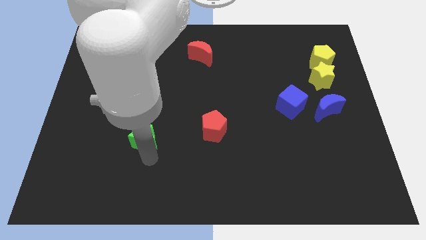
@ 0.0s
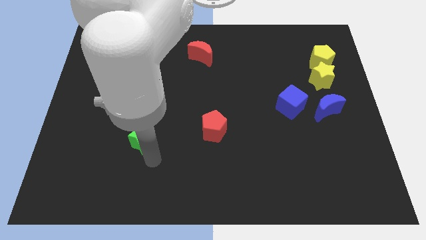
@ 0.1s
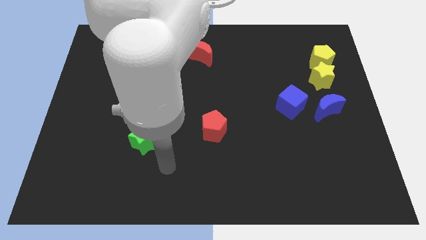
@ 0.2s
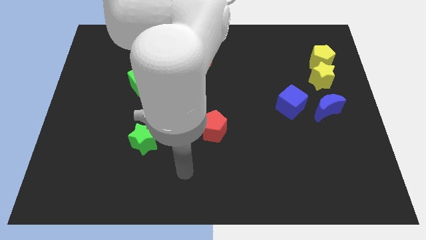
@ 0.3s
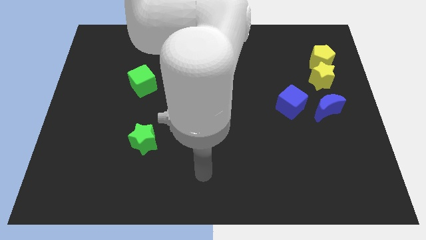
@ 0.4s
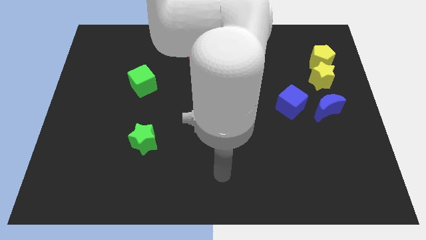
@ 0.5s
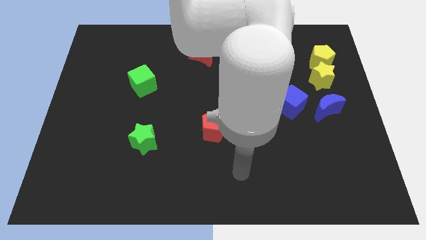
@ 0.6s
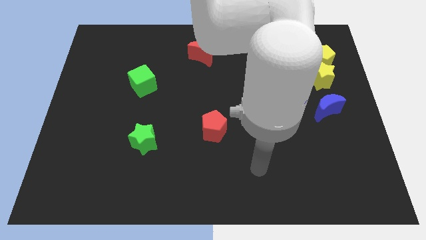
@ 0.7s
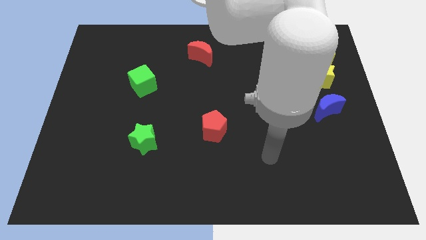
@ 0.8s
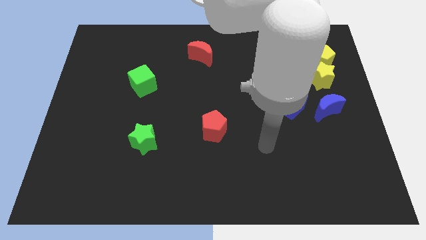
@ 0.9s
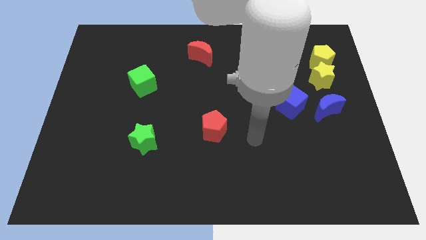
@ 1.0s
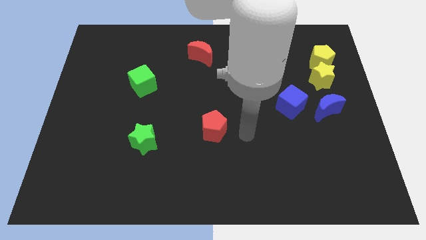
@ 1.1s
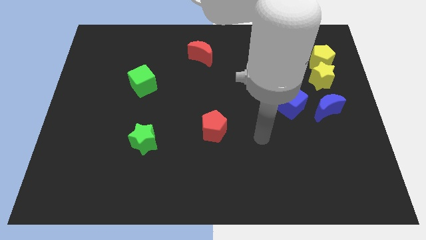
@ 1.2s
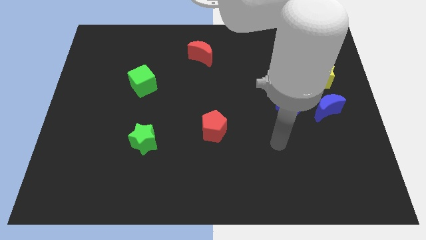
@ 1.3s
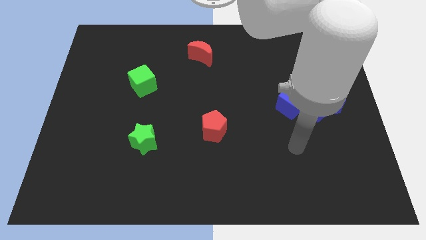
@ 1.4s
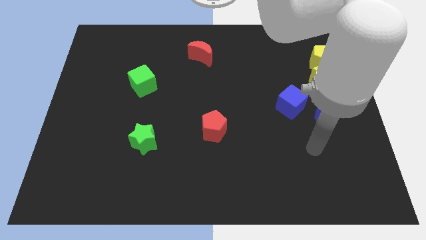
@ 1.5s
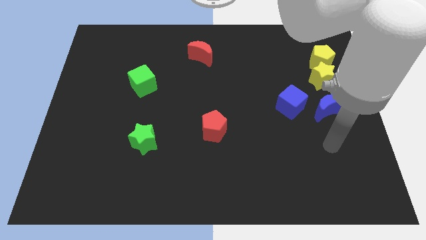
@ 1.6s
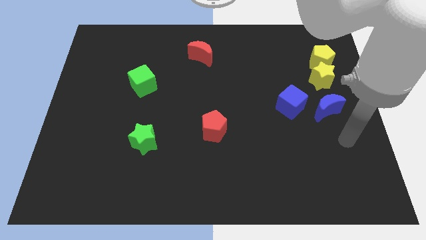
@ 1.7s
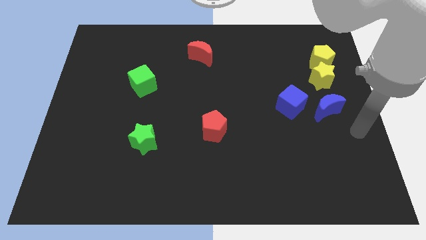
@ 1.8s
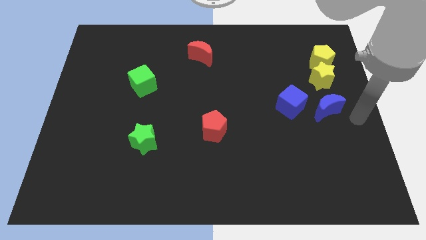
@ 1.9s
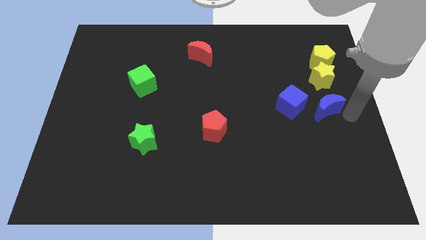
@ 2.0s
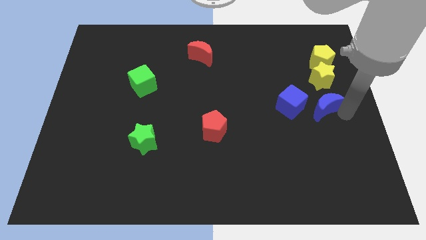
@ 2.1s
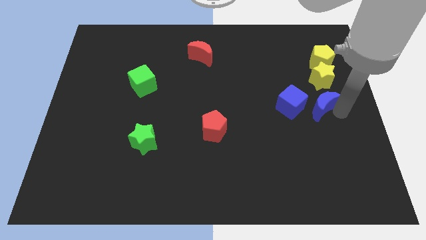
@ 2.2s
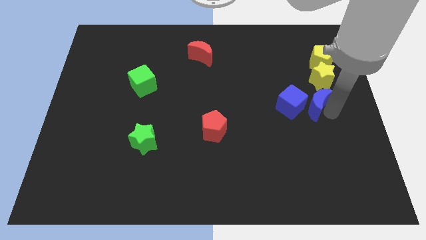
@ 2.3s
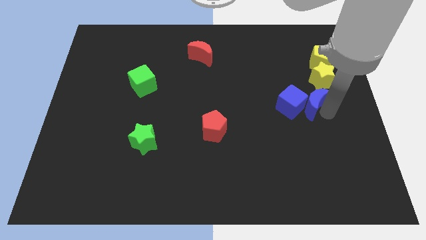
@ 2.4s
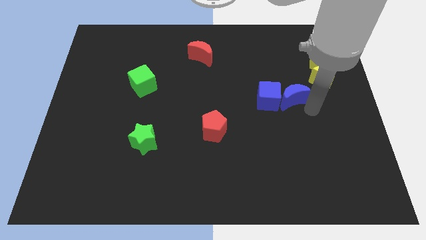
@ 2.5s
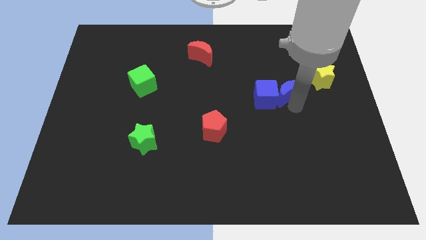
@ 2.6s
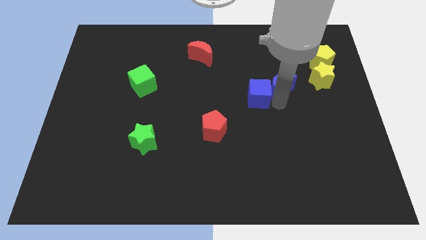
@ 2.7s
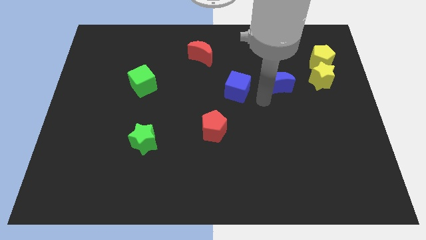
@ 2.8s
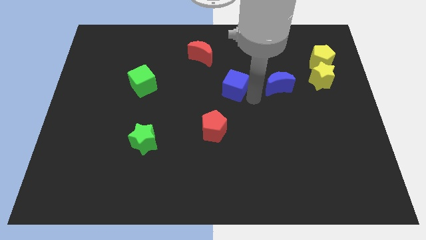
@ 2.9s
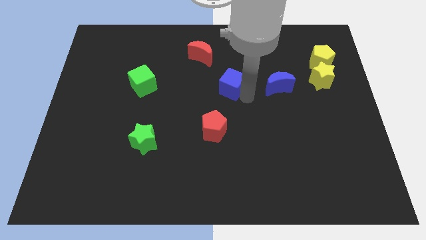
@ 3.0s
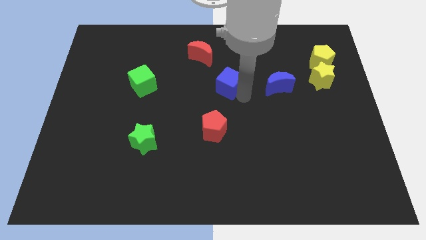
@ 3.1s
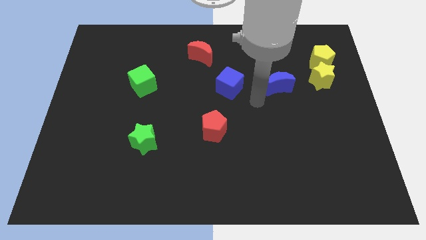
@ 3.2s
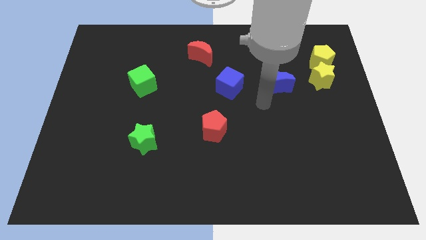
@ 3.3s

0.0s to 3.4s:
push the blue crescent and blue cube towards the red moon

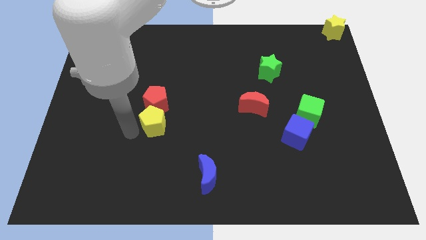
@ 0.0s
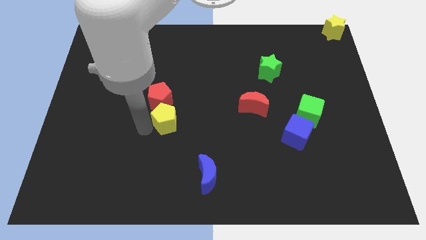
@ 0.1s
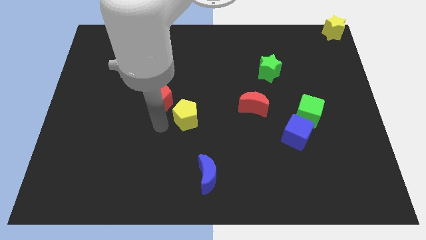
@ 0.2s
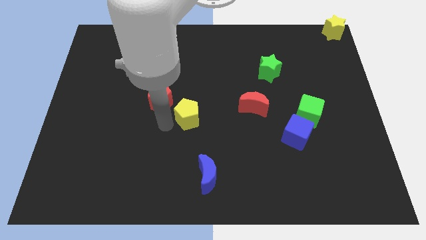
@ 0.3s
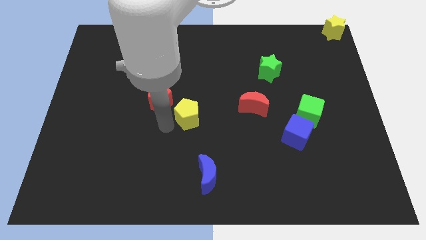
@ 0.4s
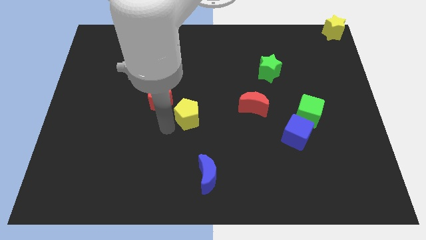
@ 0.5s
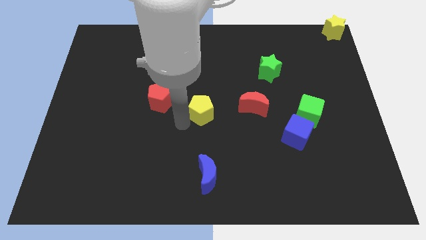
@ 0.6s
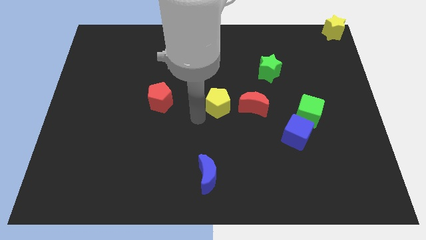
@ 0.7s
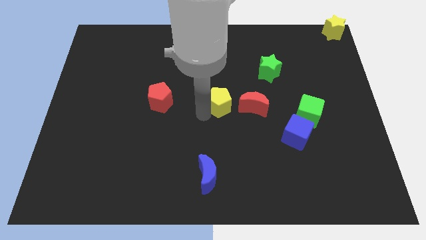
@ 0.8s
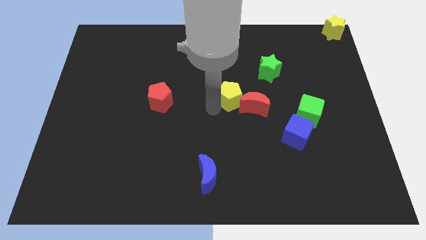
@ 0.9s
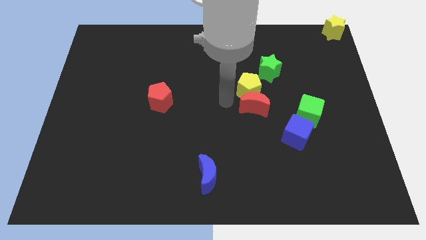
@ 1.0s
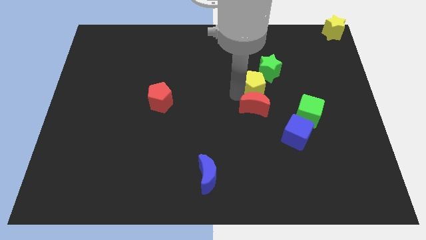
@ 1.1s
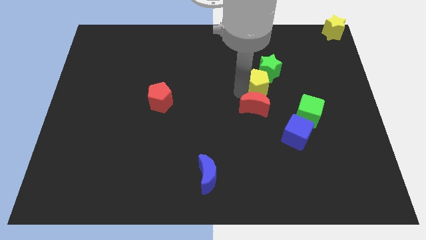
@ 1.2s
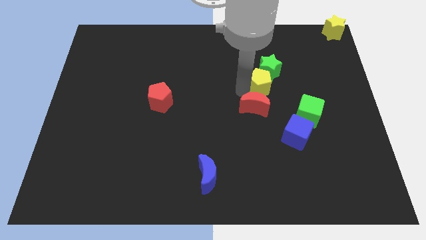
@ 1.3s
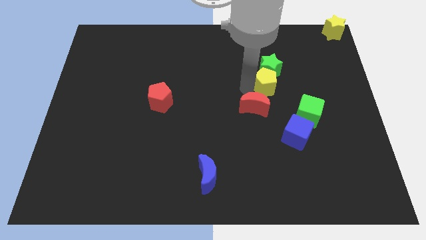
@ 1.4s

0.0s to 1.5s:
place the yellow pentagon vertically above the red moon

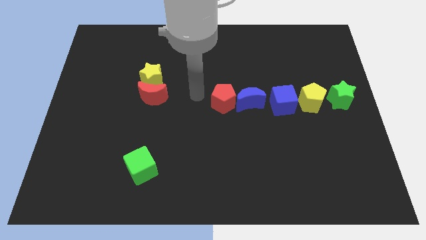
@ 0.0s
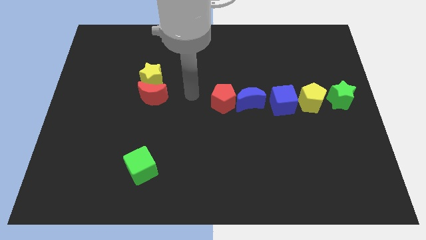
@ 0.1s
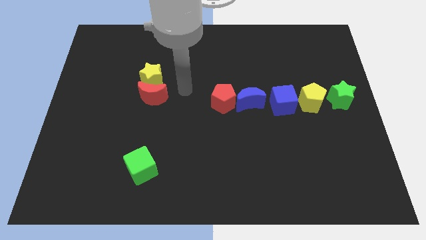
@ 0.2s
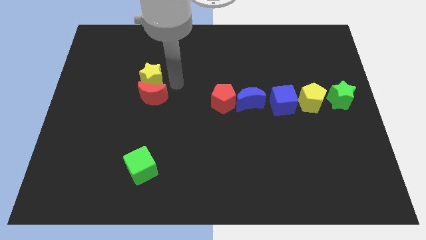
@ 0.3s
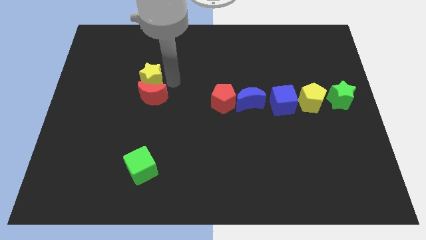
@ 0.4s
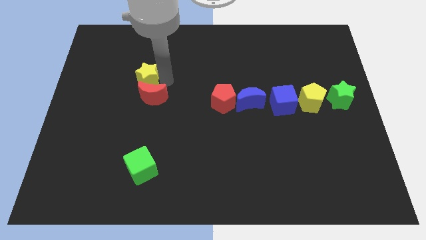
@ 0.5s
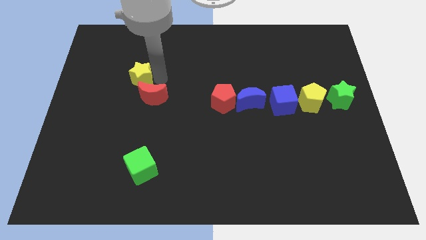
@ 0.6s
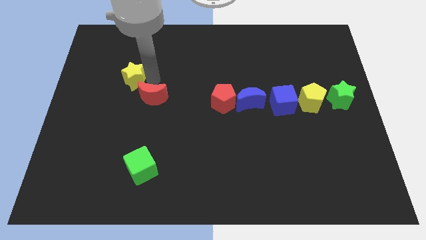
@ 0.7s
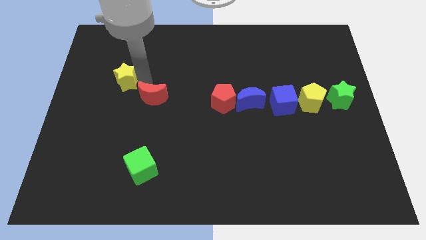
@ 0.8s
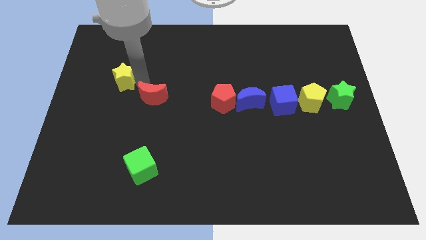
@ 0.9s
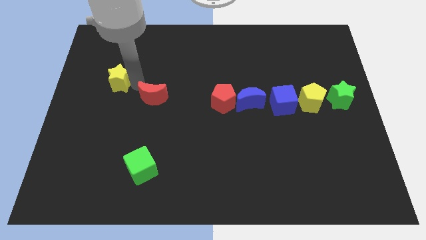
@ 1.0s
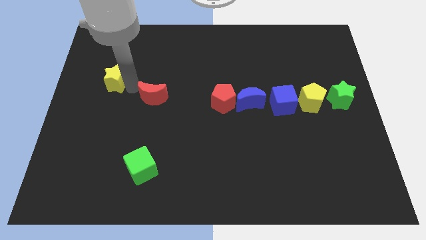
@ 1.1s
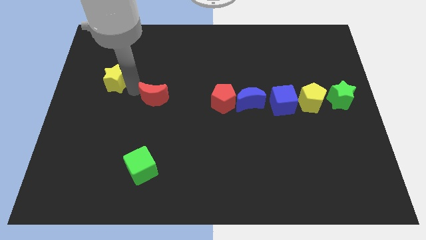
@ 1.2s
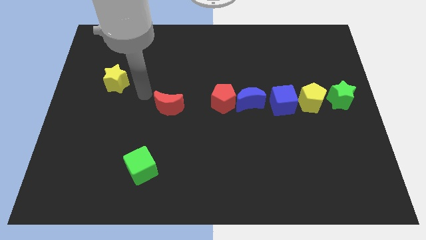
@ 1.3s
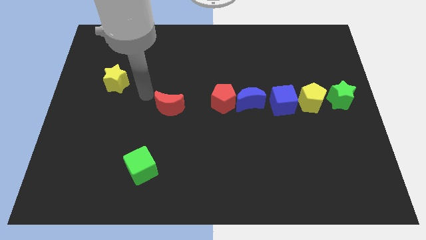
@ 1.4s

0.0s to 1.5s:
move the yellow star away from the red crescent

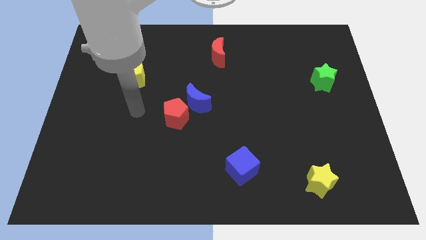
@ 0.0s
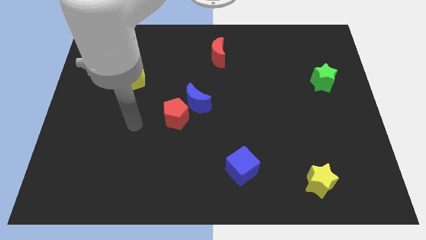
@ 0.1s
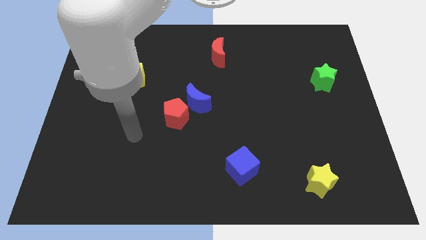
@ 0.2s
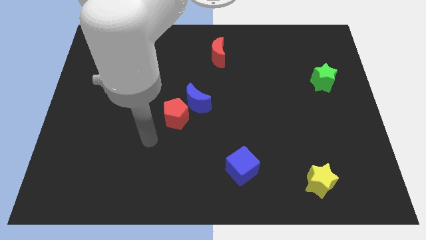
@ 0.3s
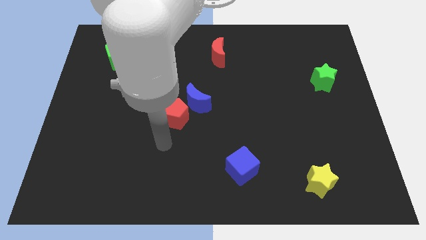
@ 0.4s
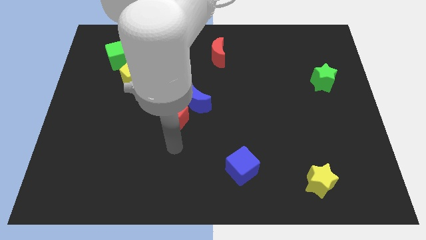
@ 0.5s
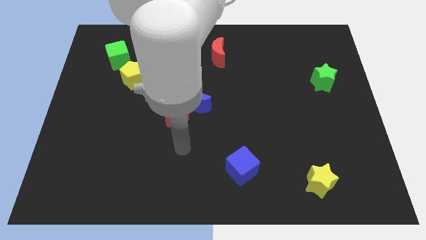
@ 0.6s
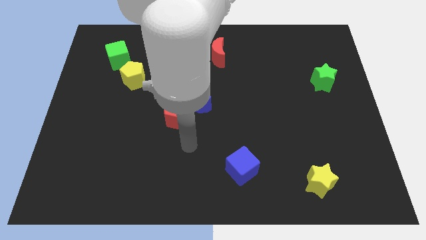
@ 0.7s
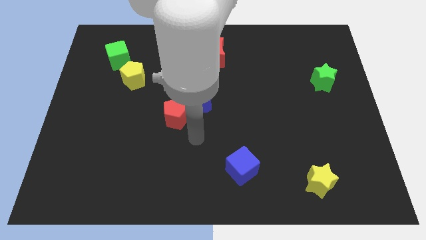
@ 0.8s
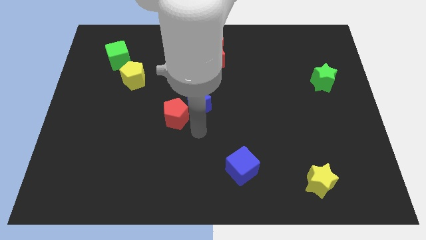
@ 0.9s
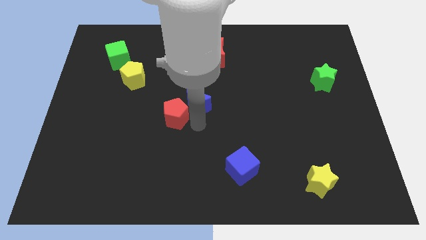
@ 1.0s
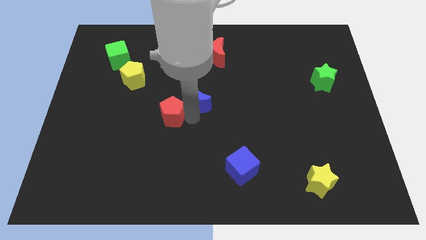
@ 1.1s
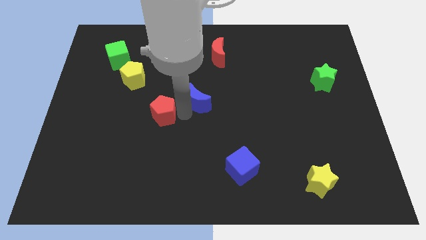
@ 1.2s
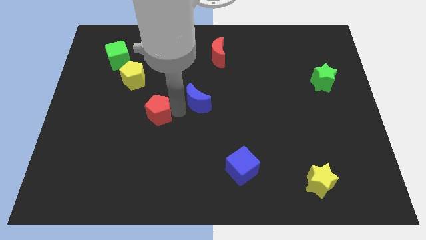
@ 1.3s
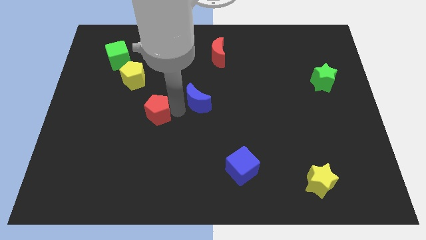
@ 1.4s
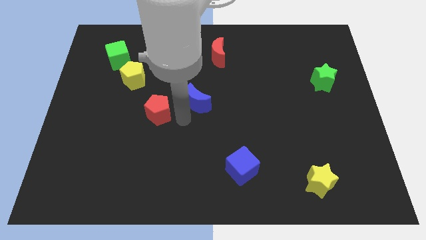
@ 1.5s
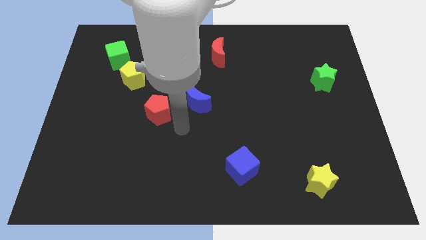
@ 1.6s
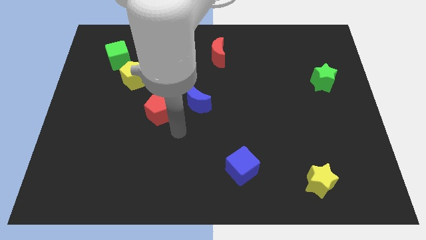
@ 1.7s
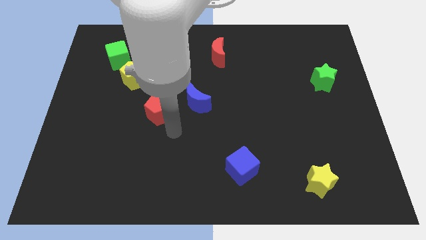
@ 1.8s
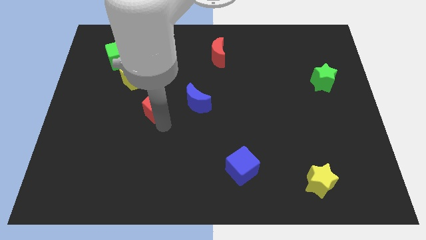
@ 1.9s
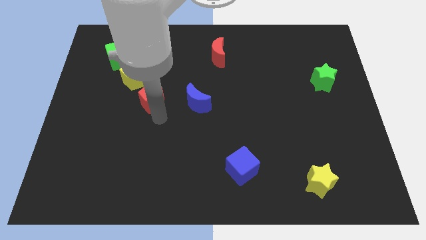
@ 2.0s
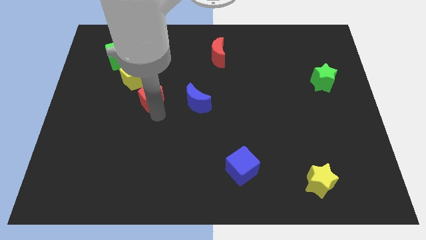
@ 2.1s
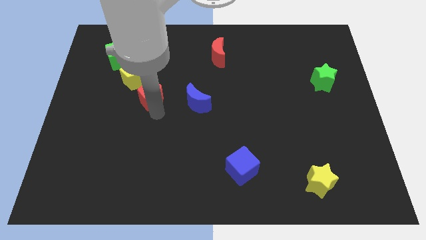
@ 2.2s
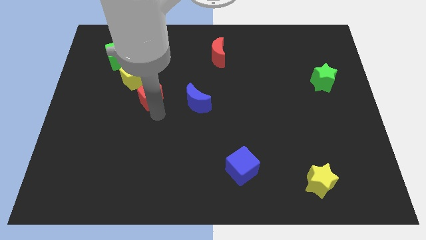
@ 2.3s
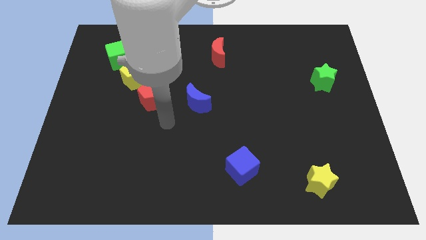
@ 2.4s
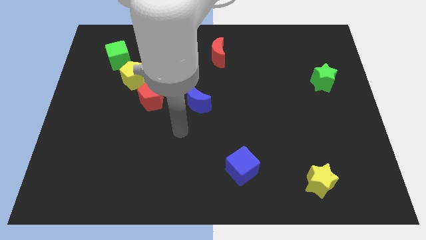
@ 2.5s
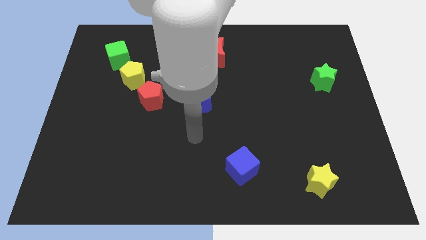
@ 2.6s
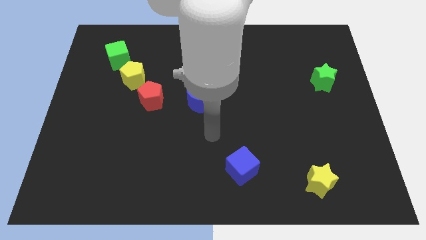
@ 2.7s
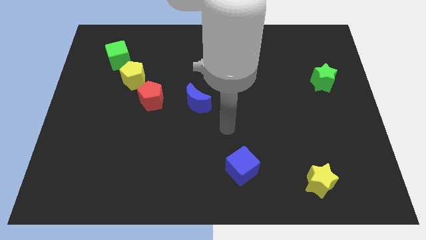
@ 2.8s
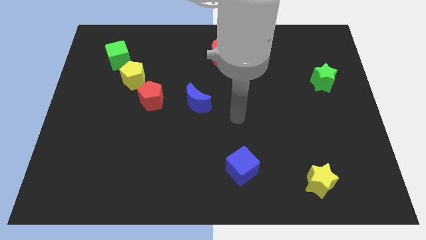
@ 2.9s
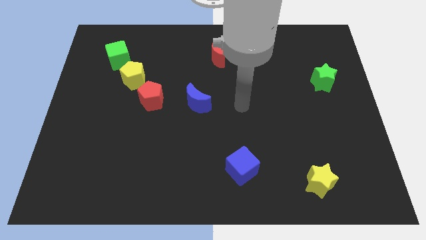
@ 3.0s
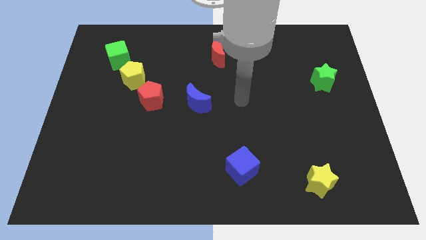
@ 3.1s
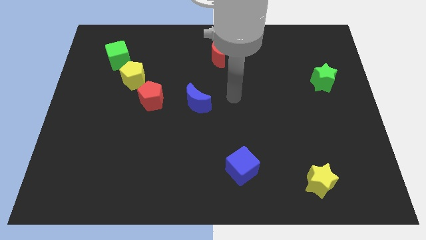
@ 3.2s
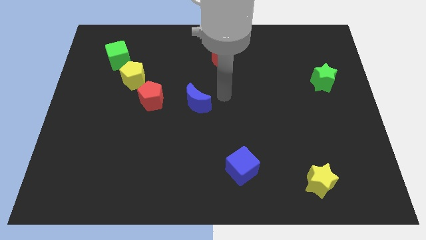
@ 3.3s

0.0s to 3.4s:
place the red pentagon to the bottom of the yellow pentagon
